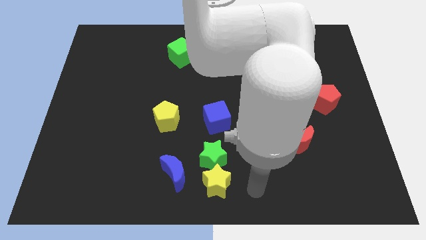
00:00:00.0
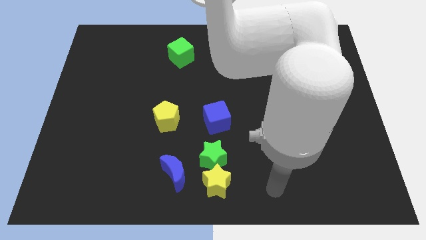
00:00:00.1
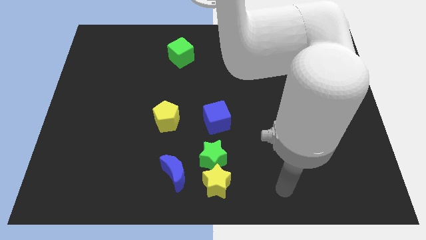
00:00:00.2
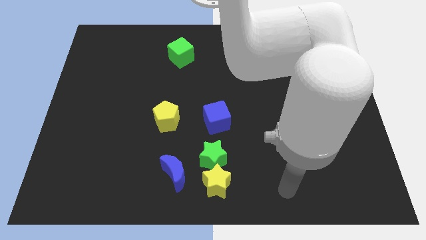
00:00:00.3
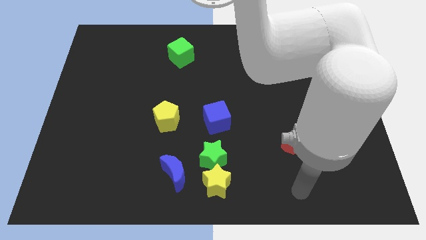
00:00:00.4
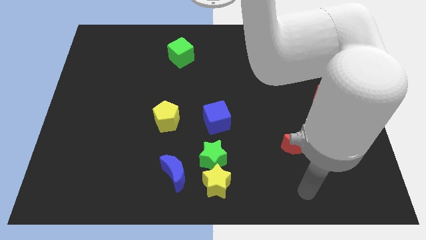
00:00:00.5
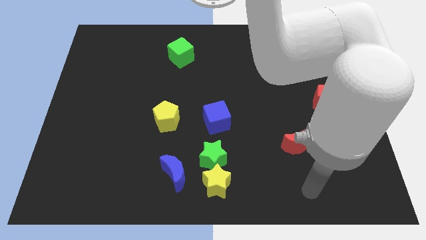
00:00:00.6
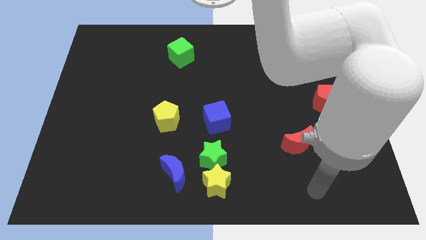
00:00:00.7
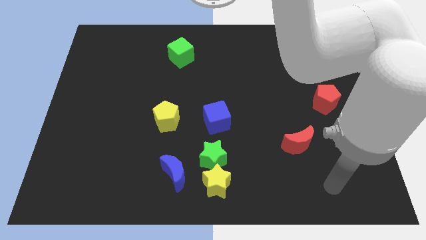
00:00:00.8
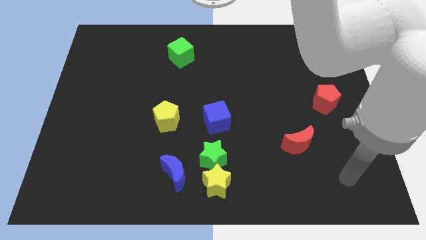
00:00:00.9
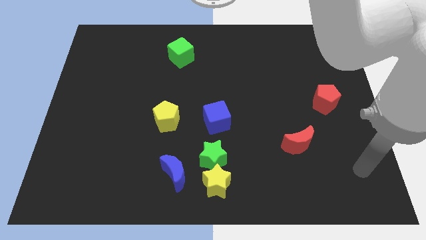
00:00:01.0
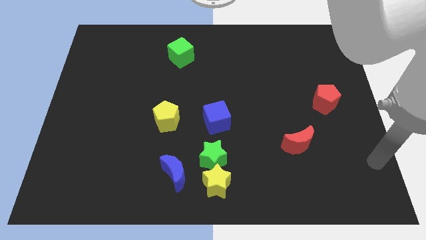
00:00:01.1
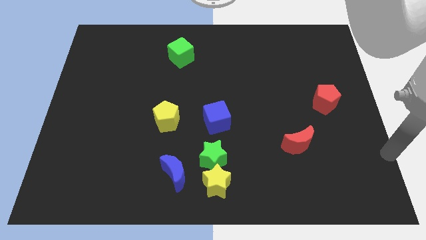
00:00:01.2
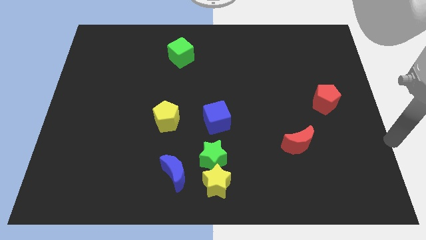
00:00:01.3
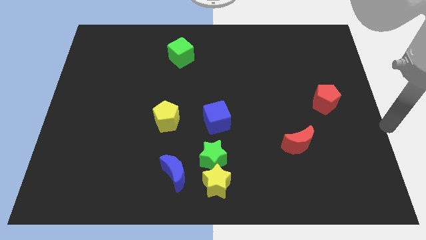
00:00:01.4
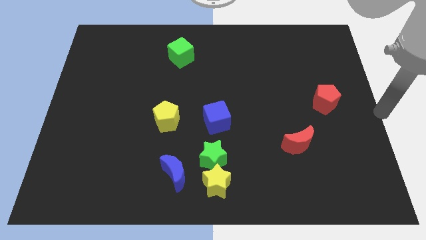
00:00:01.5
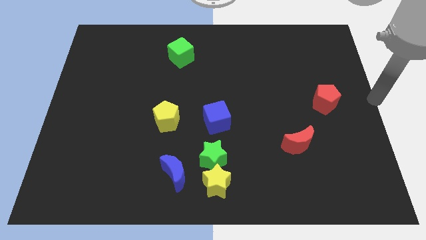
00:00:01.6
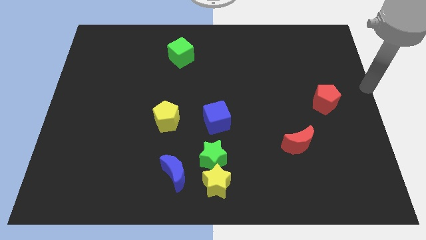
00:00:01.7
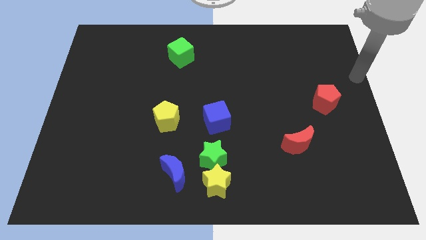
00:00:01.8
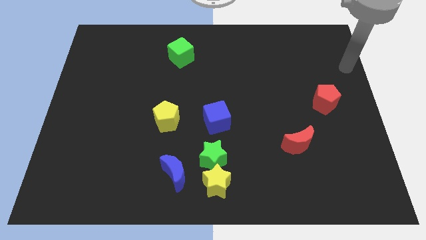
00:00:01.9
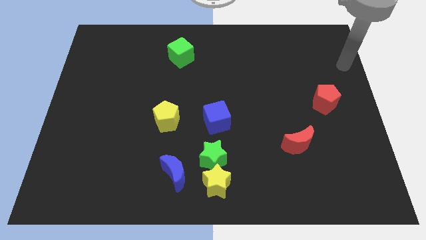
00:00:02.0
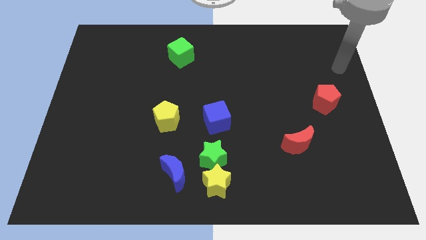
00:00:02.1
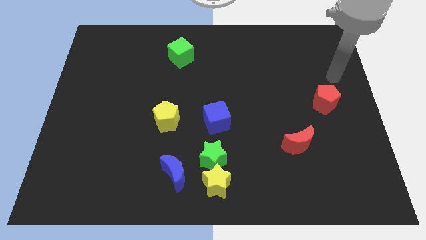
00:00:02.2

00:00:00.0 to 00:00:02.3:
point your arm on top of red pentagon

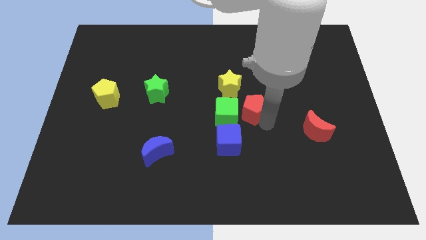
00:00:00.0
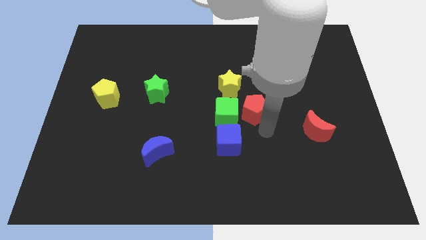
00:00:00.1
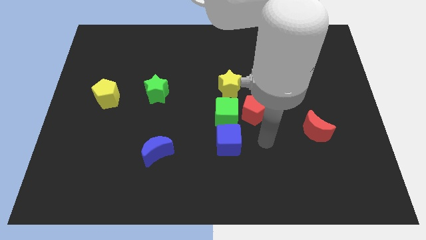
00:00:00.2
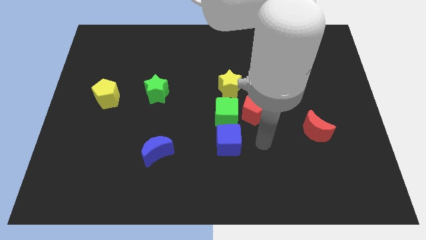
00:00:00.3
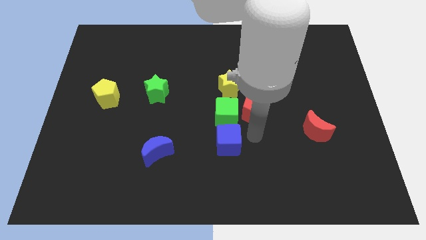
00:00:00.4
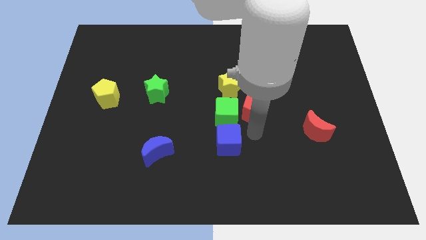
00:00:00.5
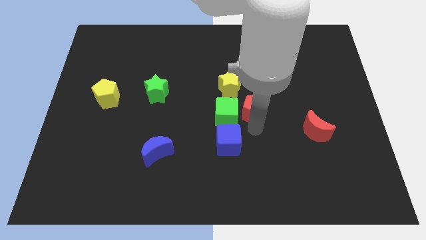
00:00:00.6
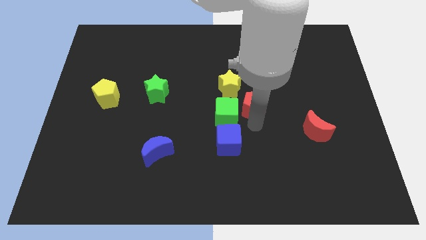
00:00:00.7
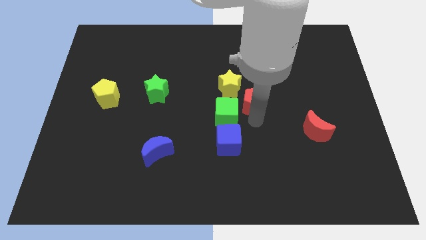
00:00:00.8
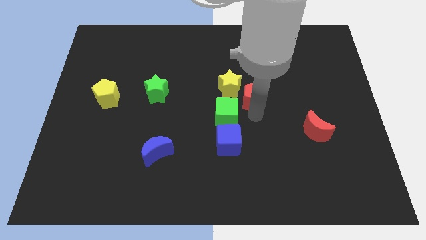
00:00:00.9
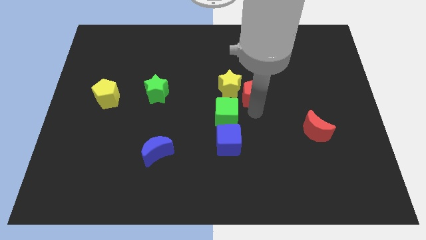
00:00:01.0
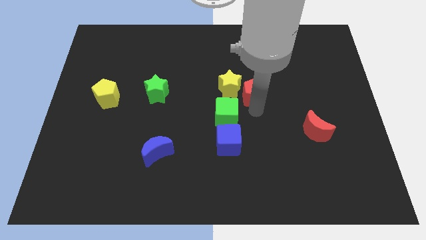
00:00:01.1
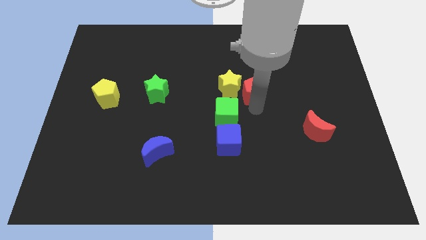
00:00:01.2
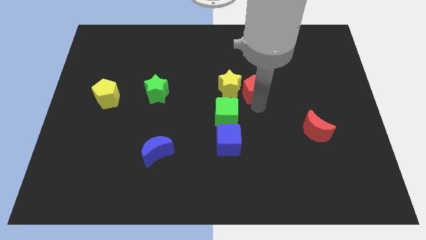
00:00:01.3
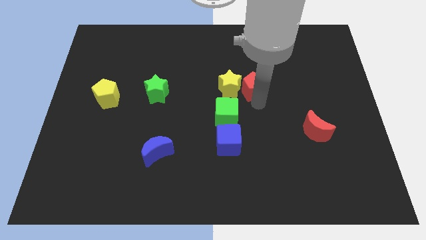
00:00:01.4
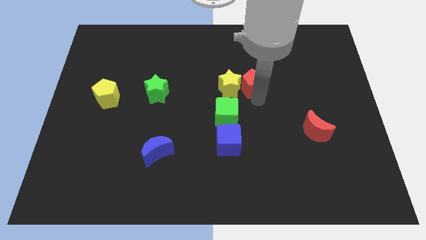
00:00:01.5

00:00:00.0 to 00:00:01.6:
place red pentagon to the right of yellow star

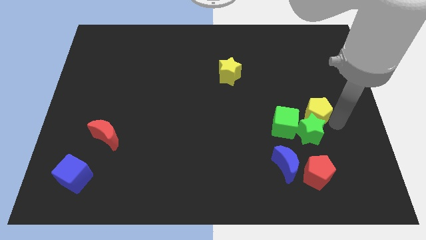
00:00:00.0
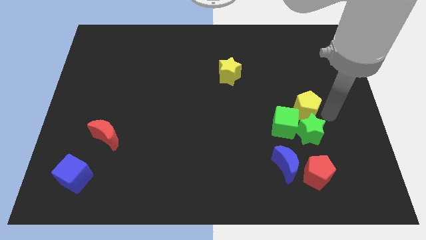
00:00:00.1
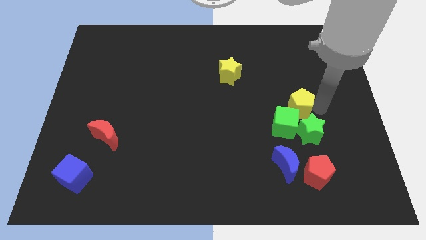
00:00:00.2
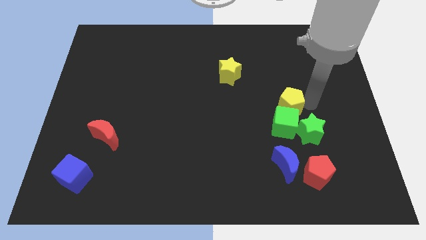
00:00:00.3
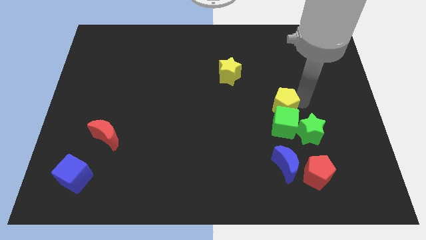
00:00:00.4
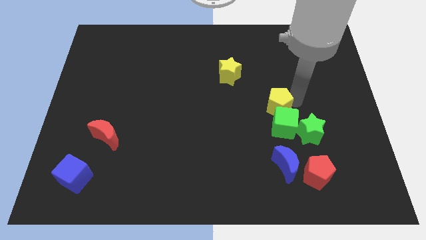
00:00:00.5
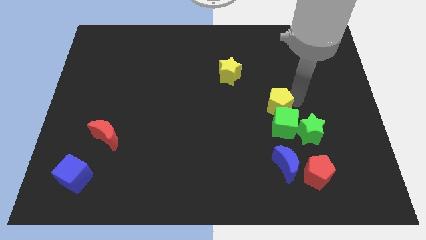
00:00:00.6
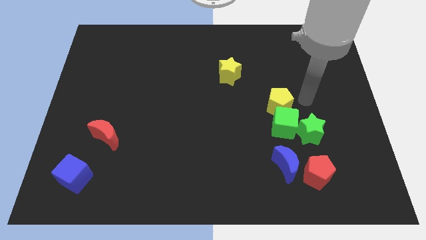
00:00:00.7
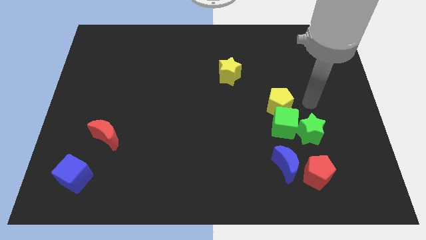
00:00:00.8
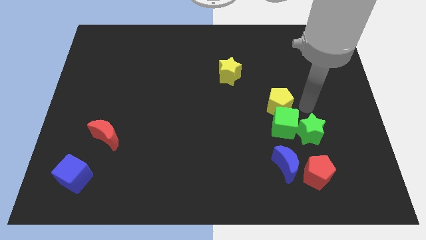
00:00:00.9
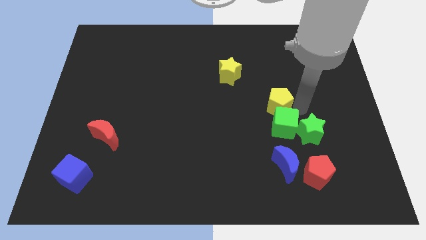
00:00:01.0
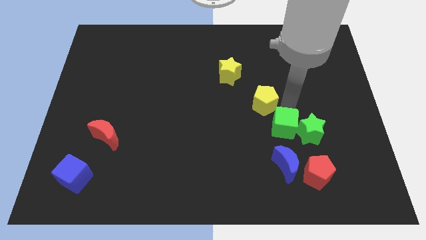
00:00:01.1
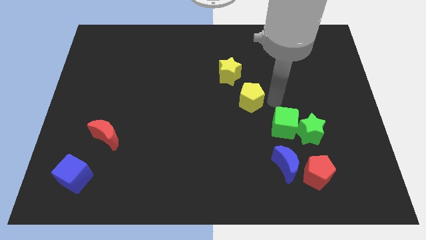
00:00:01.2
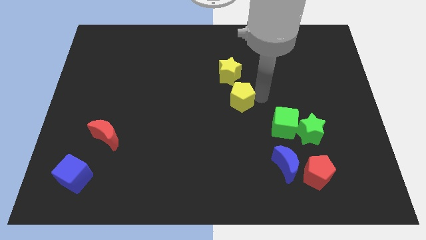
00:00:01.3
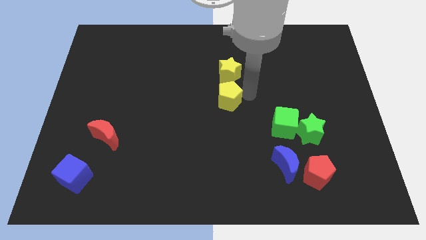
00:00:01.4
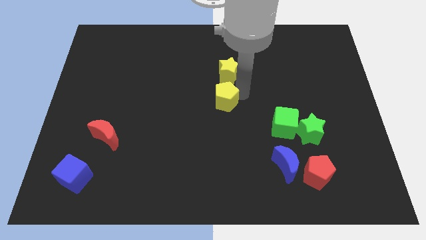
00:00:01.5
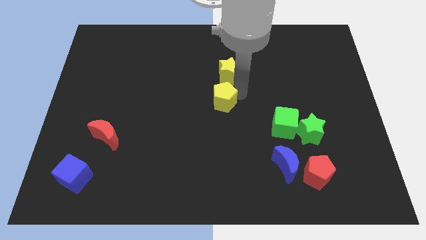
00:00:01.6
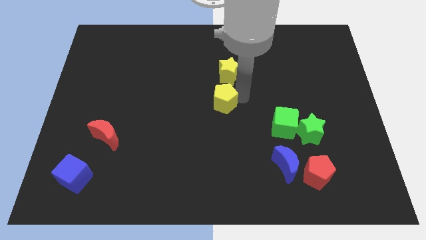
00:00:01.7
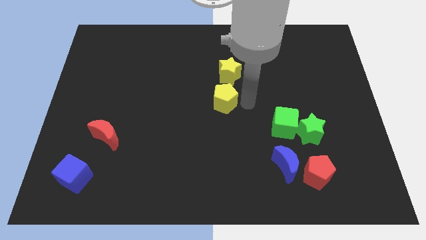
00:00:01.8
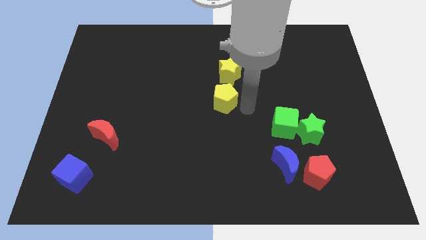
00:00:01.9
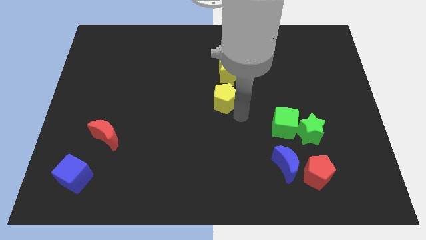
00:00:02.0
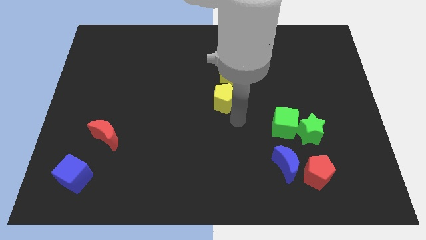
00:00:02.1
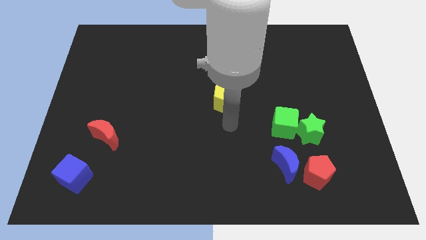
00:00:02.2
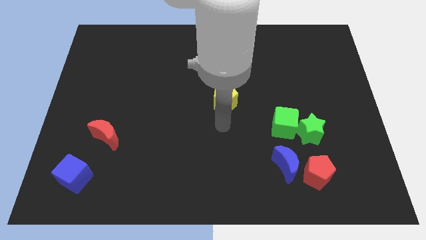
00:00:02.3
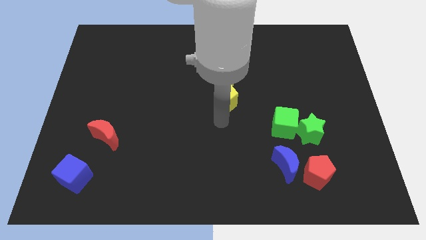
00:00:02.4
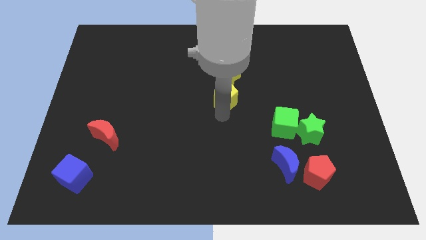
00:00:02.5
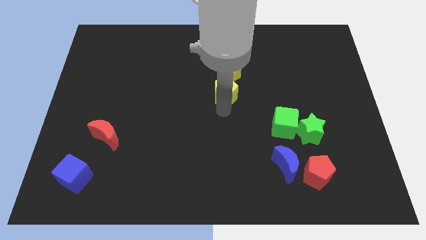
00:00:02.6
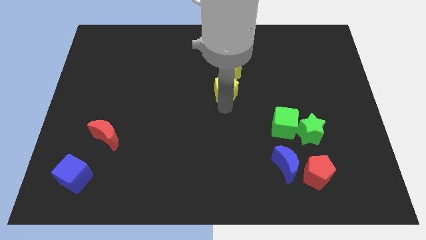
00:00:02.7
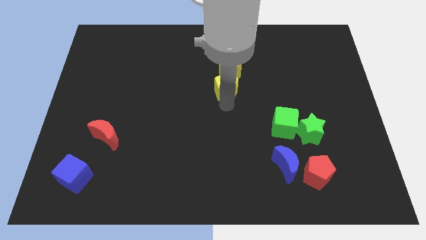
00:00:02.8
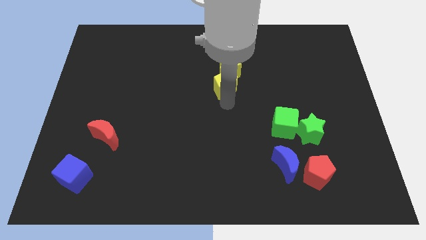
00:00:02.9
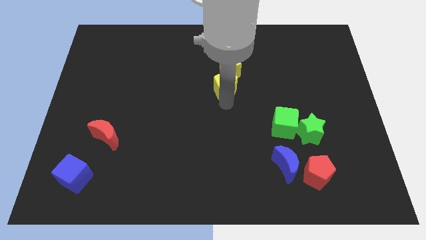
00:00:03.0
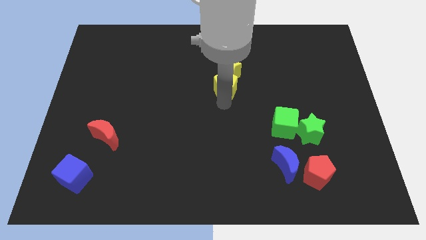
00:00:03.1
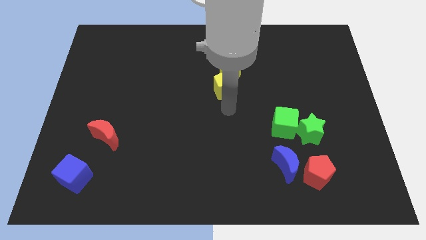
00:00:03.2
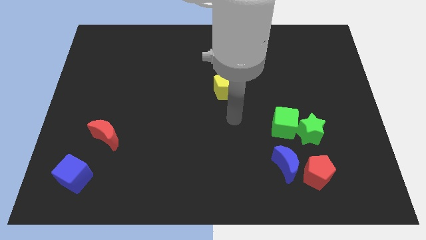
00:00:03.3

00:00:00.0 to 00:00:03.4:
move yellow pentagon to the top center

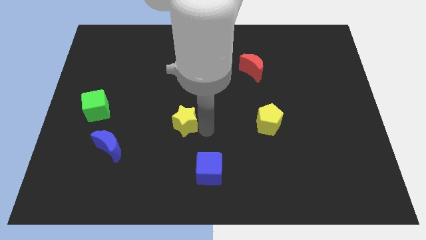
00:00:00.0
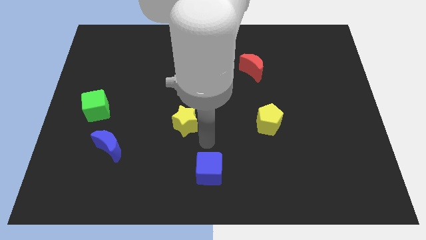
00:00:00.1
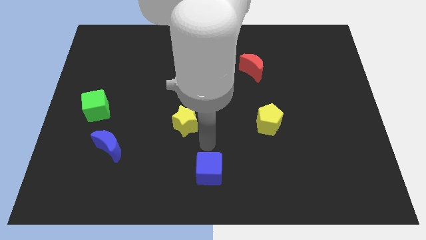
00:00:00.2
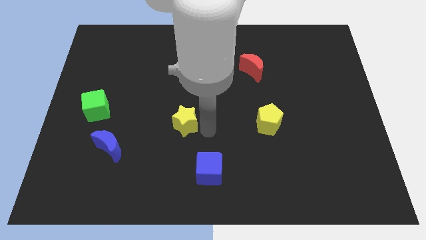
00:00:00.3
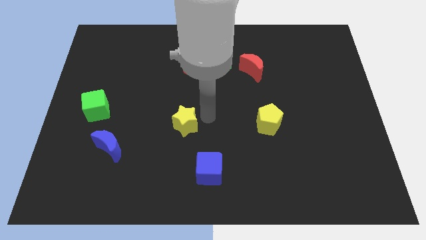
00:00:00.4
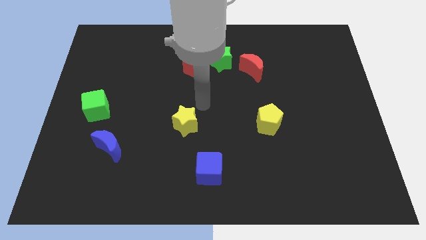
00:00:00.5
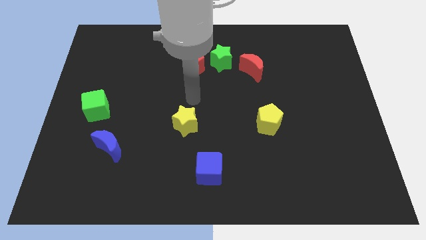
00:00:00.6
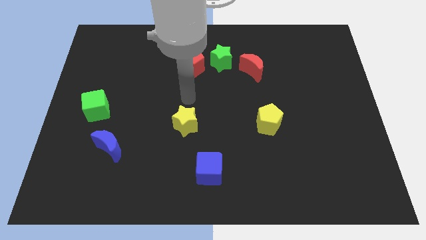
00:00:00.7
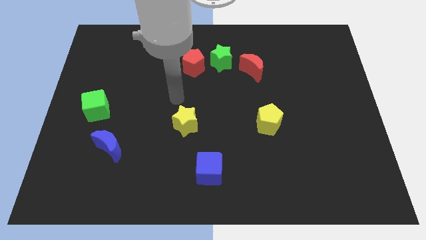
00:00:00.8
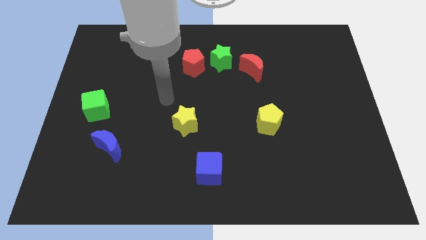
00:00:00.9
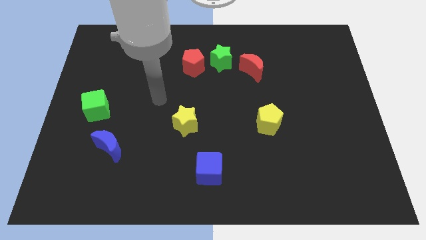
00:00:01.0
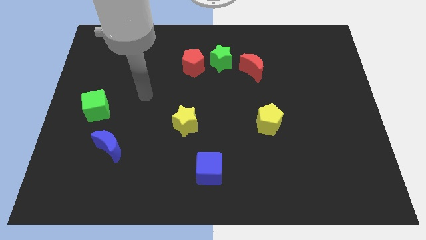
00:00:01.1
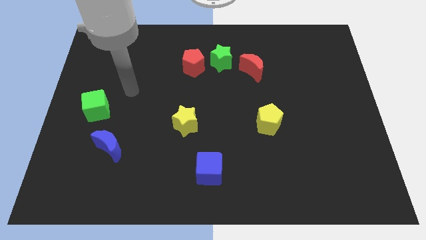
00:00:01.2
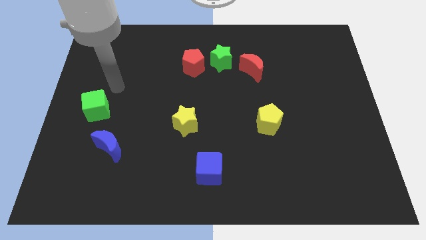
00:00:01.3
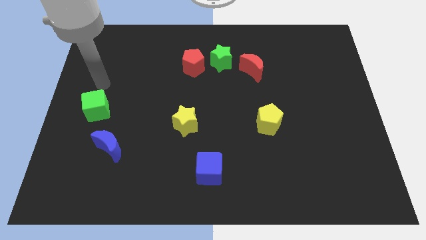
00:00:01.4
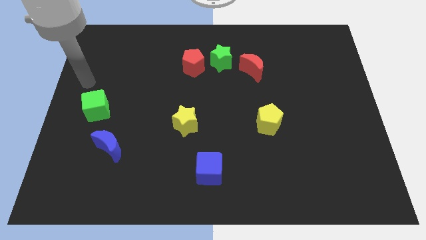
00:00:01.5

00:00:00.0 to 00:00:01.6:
move your arm away from the yellow star

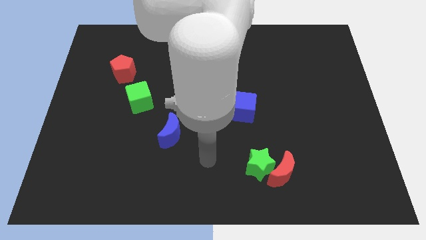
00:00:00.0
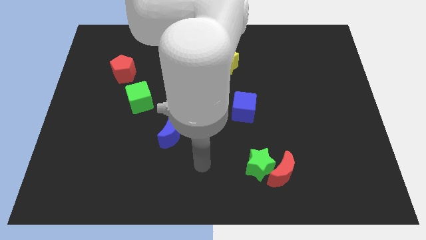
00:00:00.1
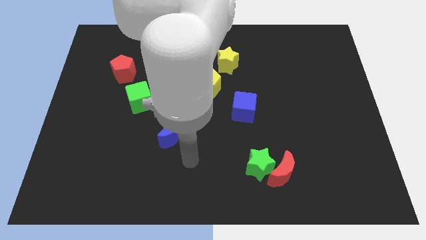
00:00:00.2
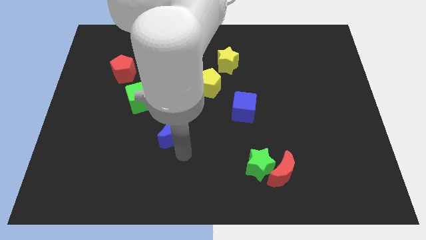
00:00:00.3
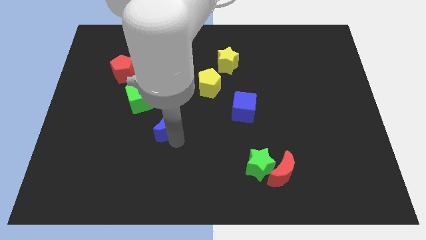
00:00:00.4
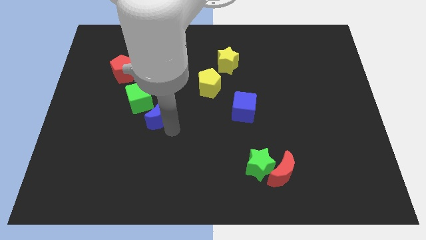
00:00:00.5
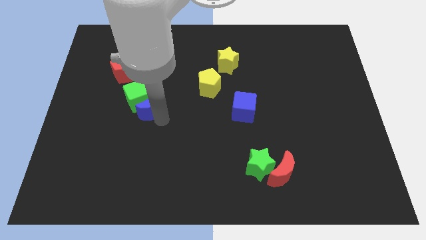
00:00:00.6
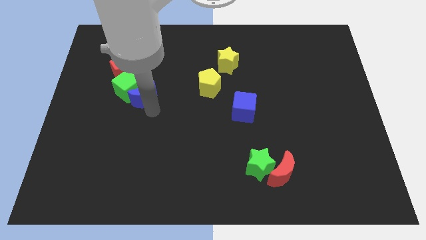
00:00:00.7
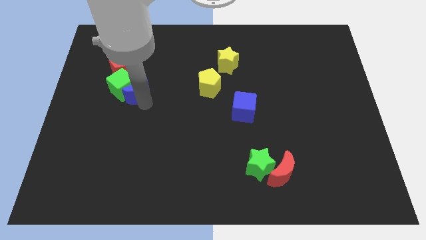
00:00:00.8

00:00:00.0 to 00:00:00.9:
push the blue crescent into the green cube
